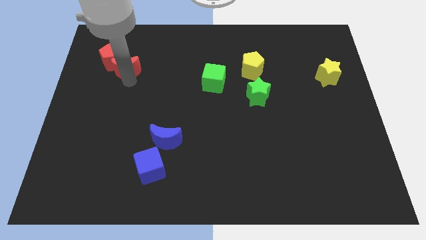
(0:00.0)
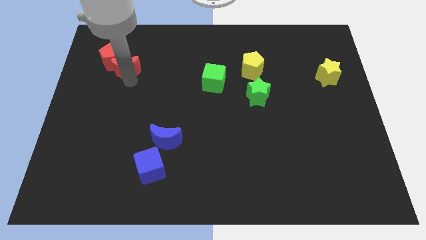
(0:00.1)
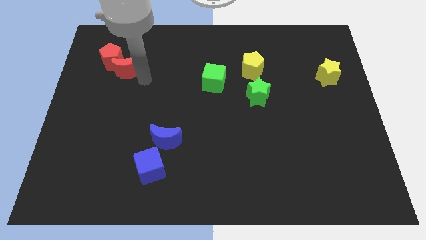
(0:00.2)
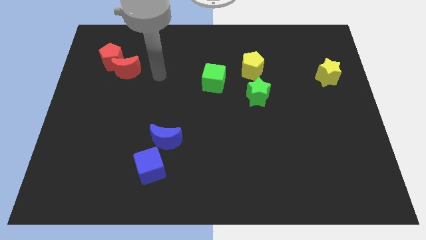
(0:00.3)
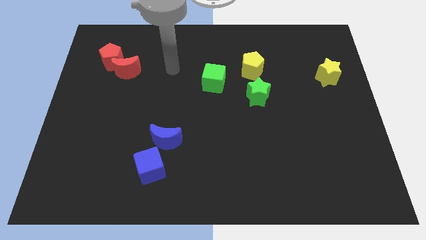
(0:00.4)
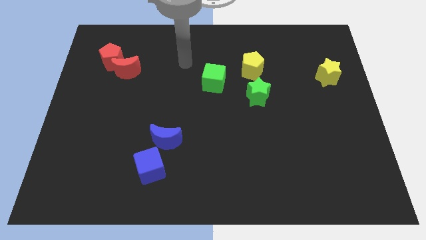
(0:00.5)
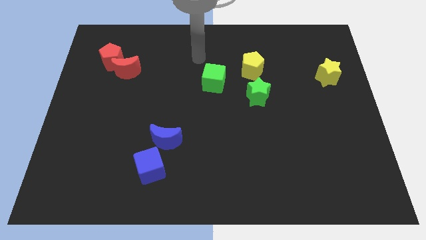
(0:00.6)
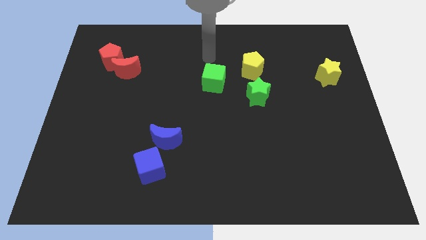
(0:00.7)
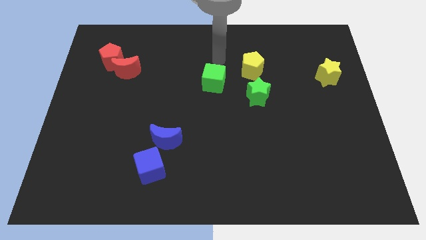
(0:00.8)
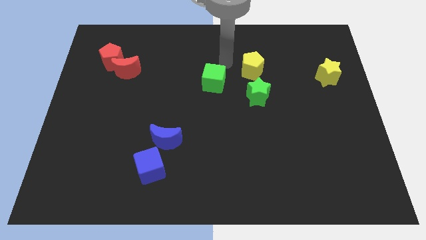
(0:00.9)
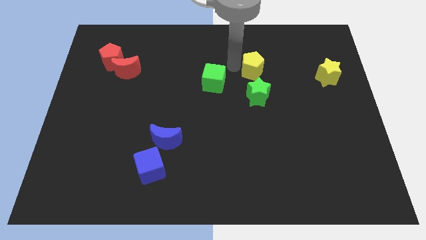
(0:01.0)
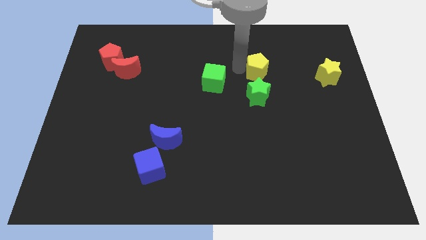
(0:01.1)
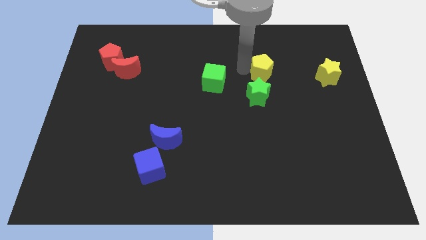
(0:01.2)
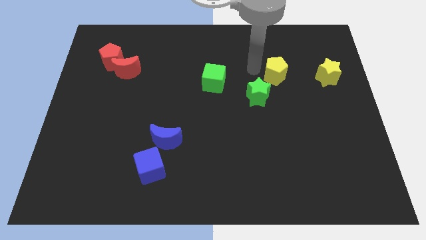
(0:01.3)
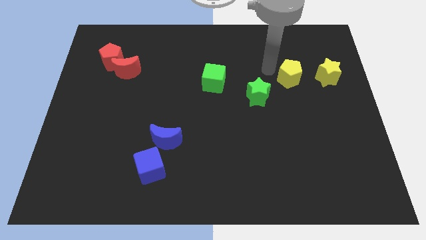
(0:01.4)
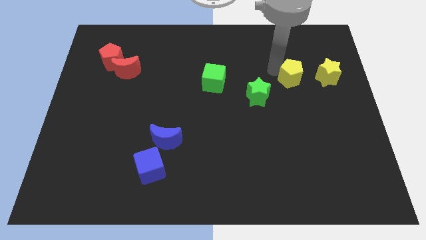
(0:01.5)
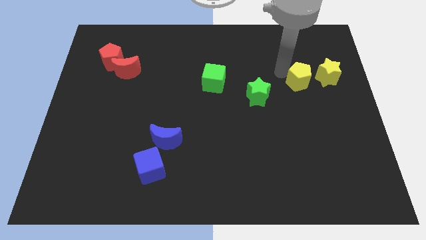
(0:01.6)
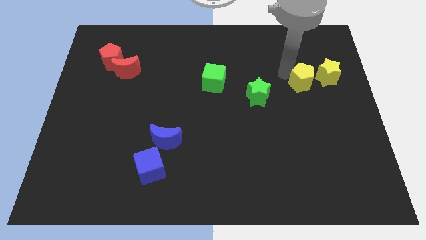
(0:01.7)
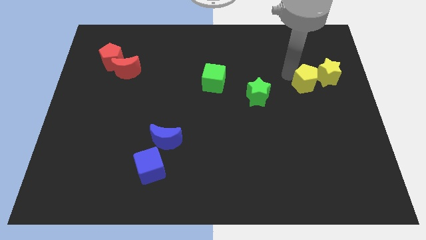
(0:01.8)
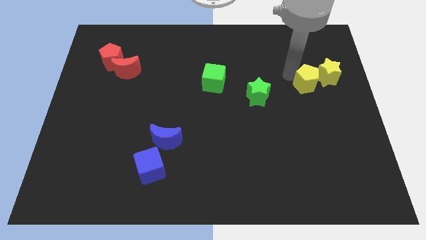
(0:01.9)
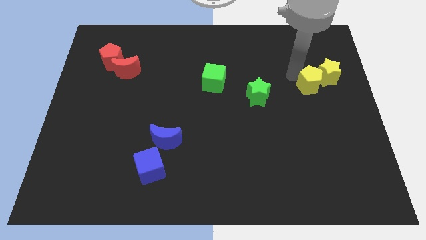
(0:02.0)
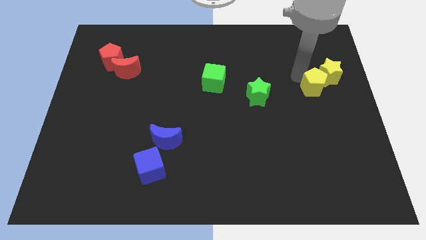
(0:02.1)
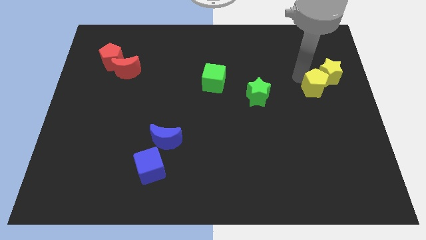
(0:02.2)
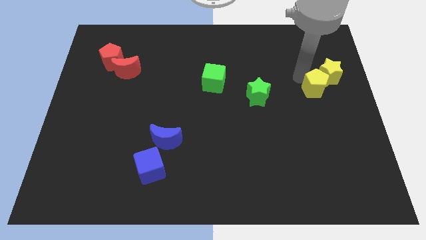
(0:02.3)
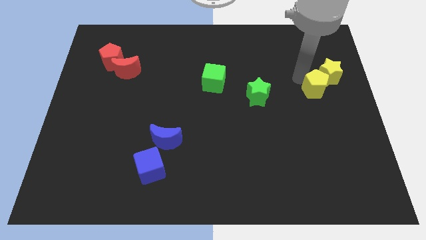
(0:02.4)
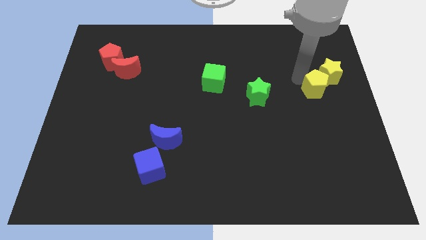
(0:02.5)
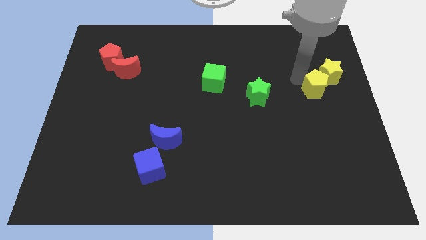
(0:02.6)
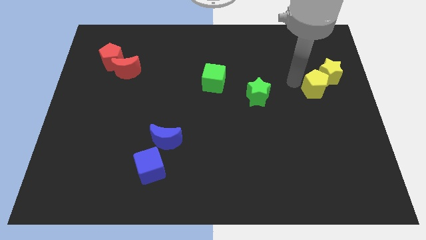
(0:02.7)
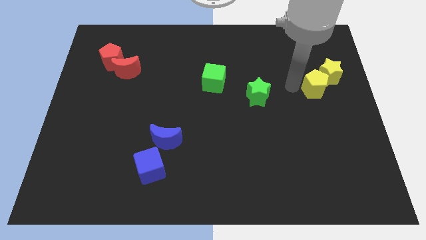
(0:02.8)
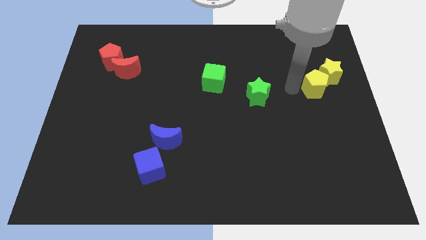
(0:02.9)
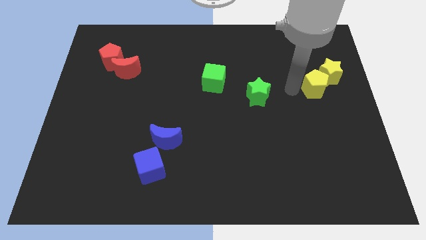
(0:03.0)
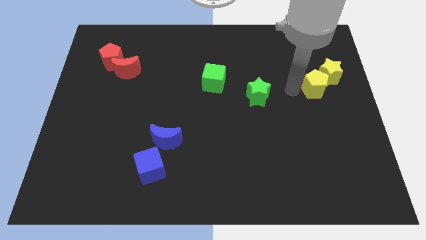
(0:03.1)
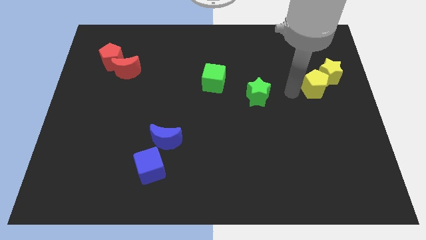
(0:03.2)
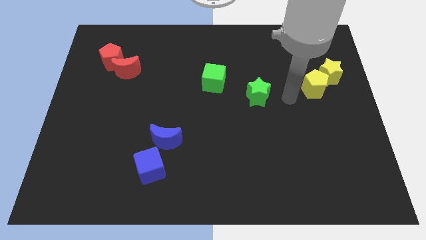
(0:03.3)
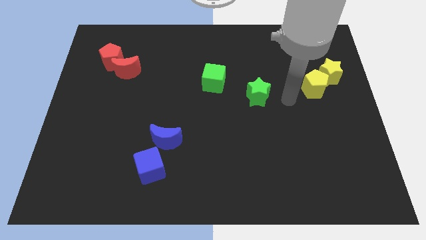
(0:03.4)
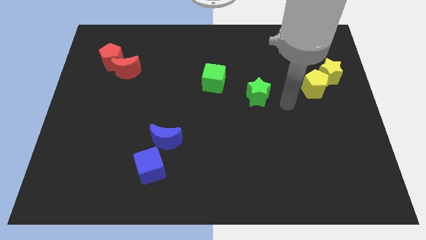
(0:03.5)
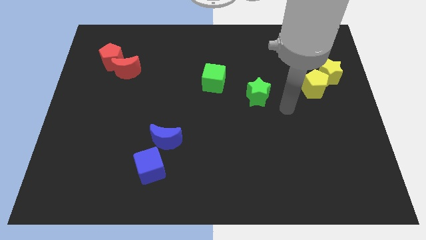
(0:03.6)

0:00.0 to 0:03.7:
move the yellow pentagon into the yellow star

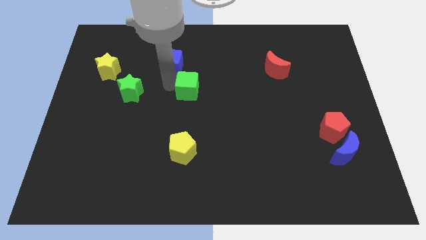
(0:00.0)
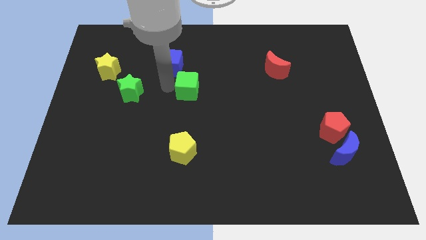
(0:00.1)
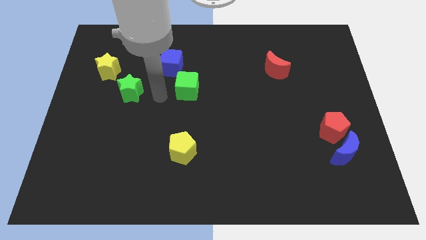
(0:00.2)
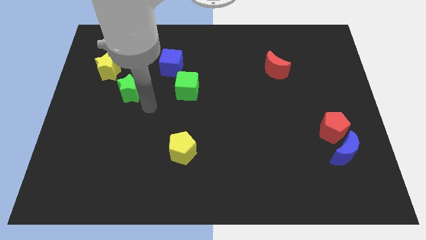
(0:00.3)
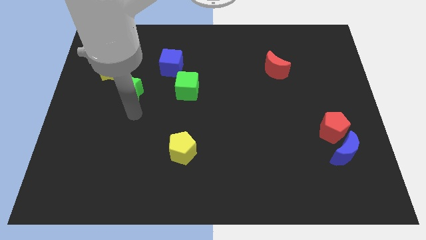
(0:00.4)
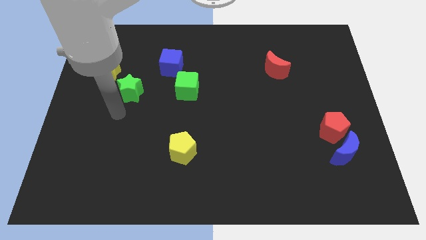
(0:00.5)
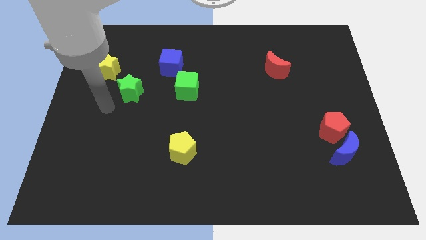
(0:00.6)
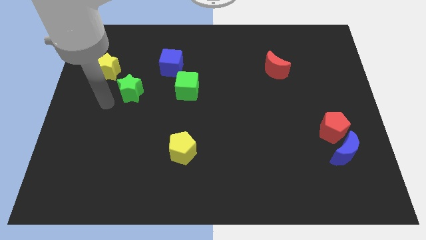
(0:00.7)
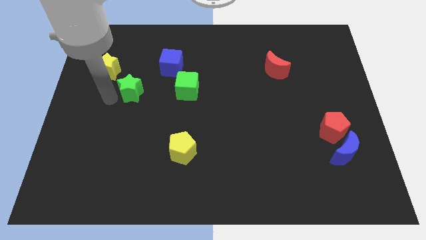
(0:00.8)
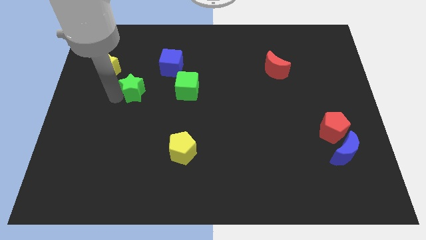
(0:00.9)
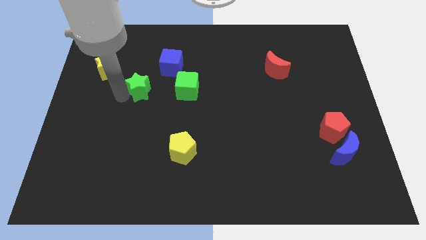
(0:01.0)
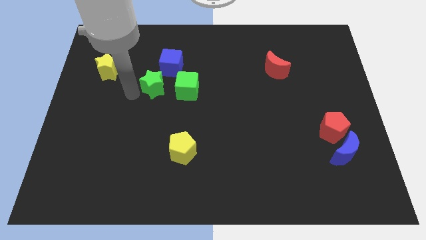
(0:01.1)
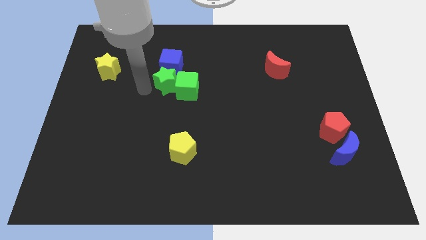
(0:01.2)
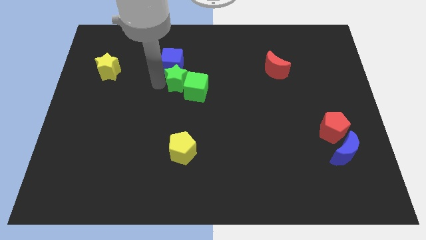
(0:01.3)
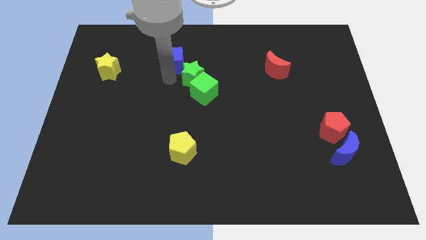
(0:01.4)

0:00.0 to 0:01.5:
drag the green star into the group of blocks

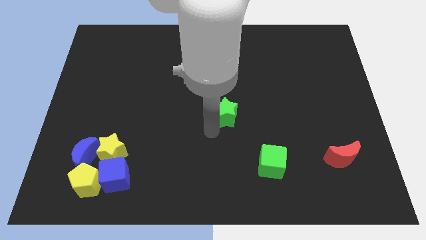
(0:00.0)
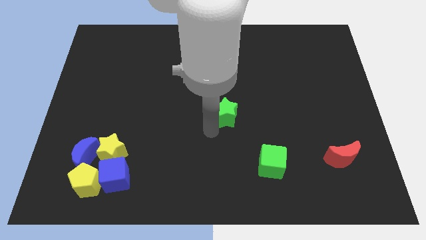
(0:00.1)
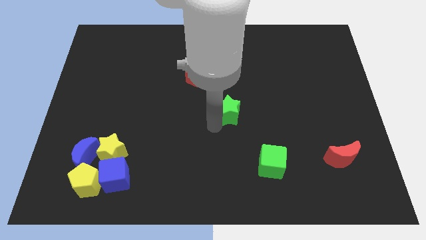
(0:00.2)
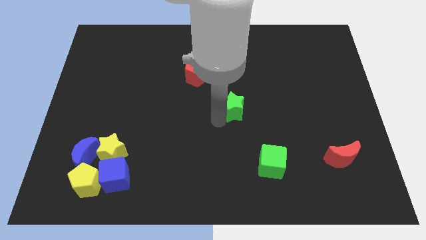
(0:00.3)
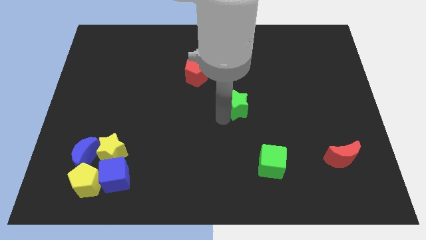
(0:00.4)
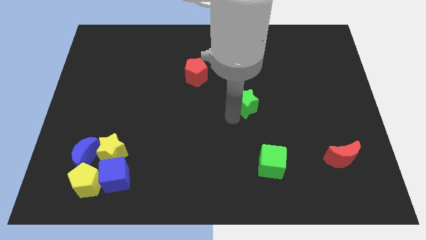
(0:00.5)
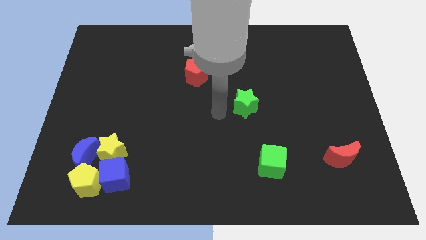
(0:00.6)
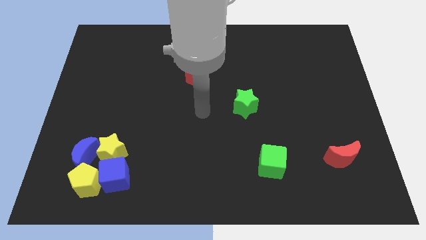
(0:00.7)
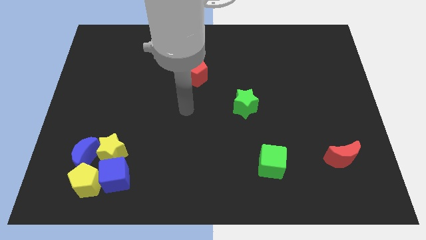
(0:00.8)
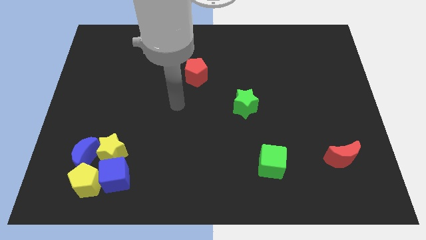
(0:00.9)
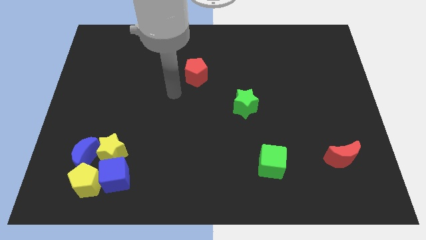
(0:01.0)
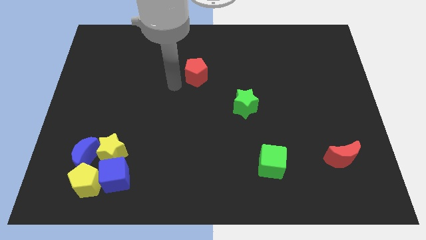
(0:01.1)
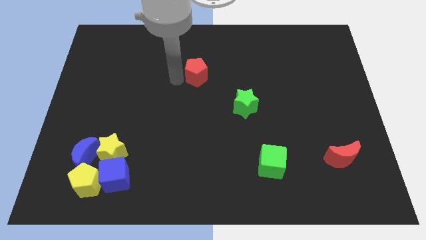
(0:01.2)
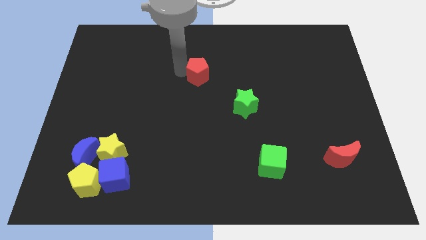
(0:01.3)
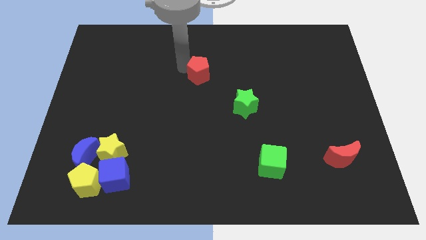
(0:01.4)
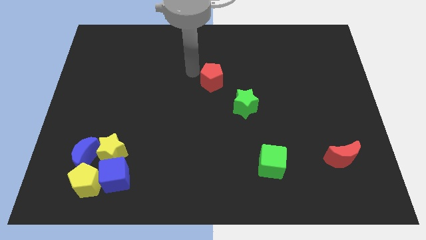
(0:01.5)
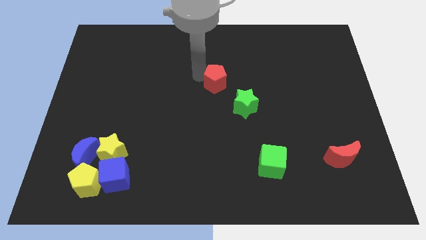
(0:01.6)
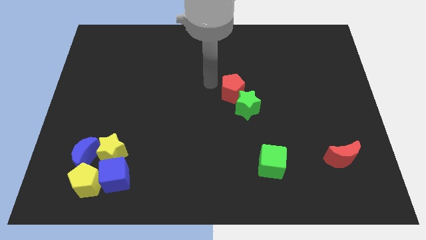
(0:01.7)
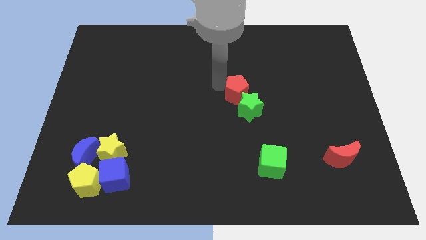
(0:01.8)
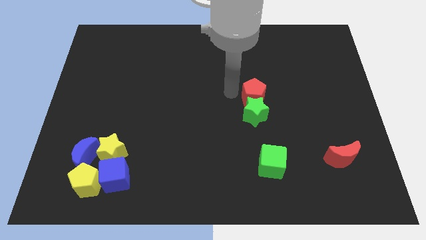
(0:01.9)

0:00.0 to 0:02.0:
move red pentagon to the top of the green star

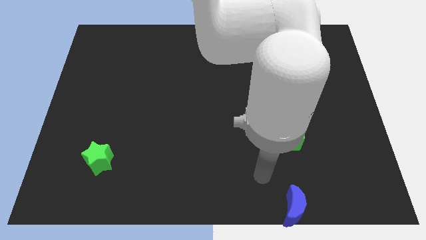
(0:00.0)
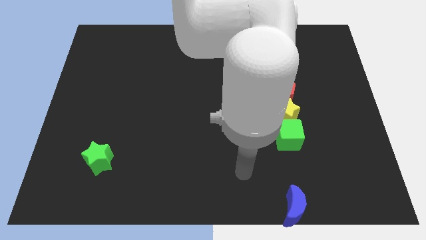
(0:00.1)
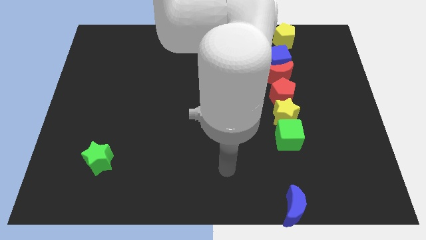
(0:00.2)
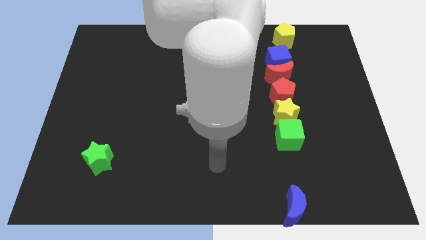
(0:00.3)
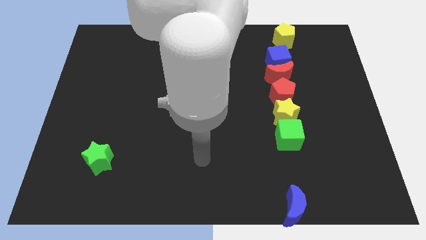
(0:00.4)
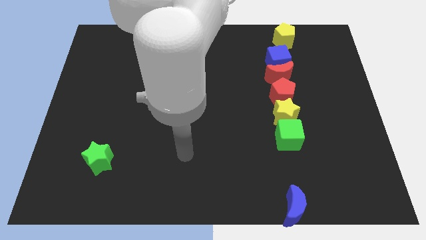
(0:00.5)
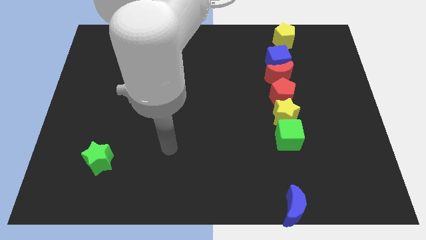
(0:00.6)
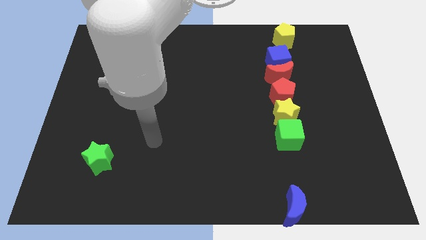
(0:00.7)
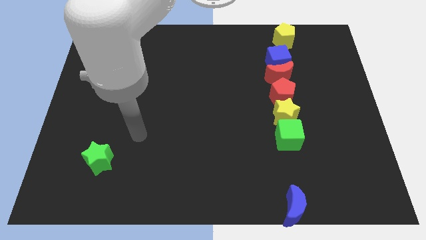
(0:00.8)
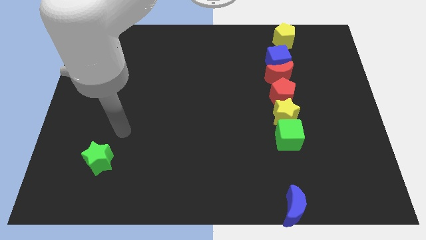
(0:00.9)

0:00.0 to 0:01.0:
move the arm away from the blue moon

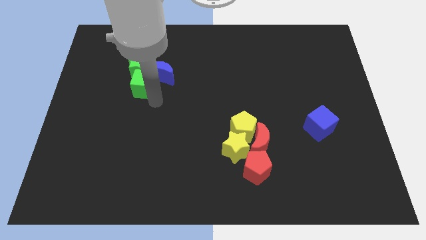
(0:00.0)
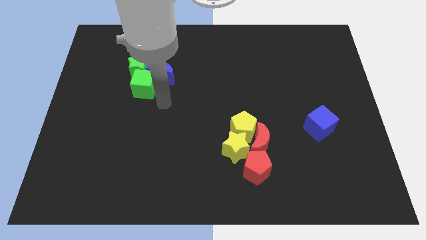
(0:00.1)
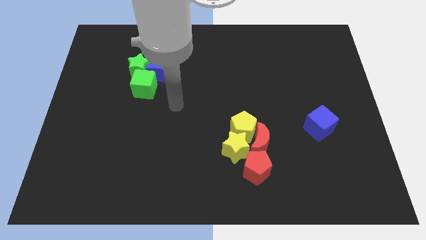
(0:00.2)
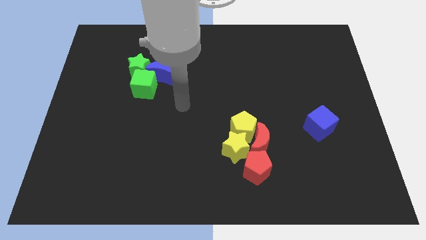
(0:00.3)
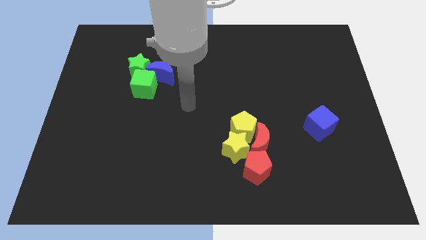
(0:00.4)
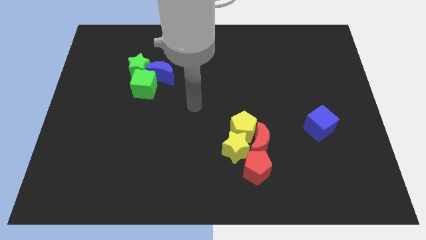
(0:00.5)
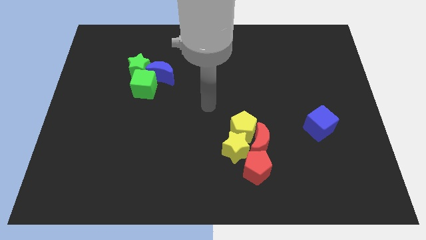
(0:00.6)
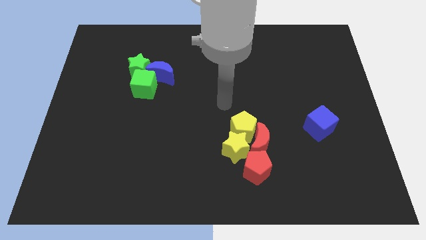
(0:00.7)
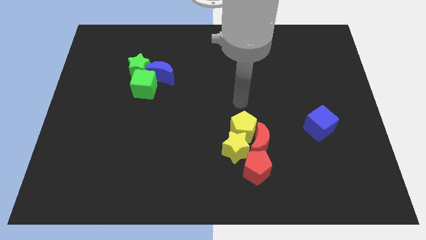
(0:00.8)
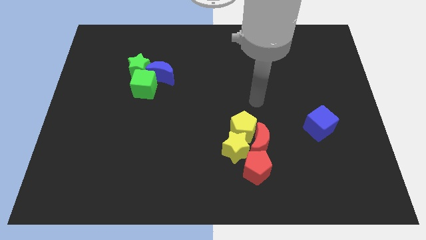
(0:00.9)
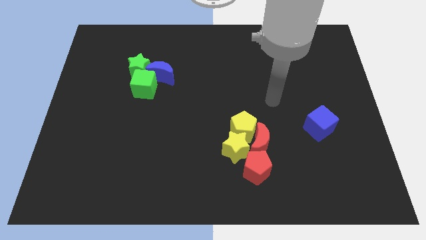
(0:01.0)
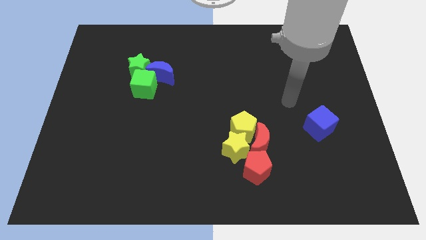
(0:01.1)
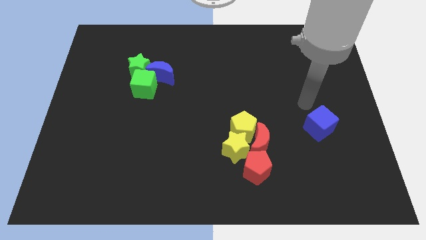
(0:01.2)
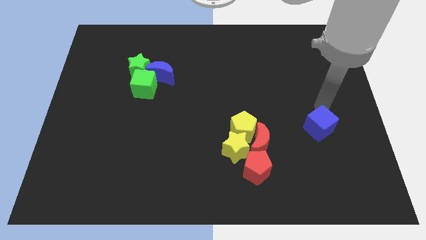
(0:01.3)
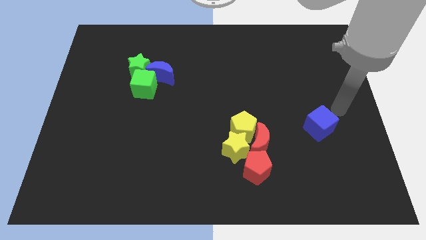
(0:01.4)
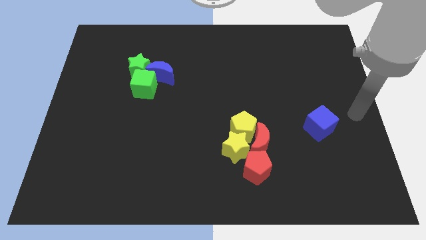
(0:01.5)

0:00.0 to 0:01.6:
move your arm away from green cube
